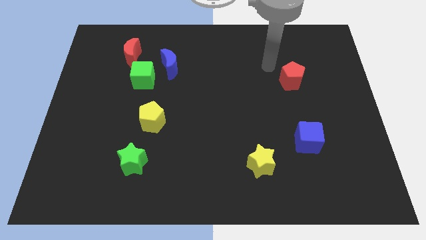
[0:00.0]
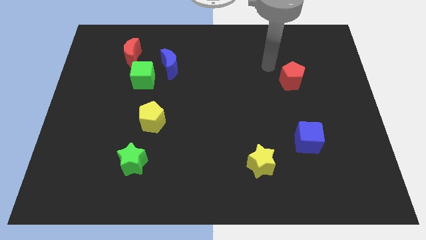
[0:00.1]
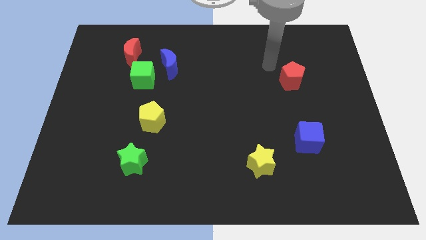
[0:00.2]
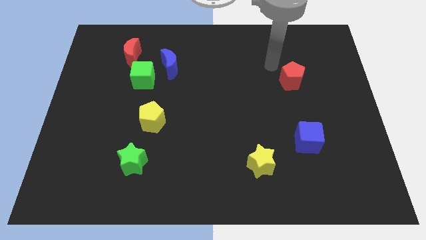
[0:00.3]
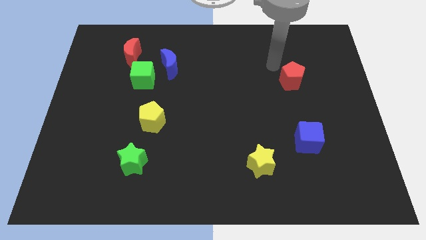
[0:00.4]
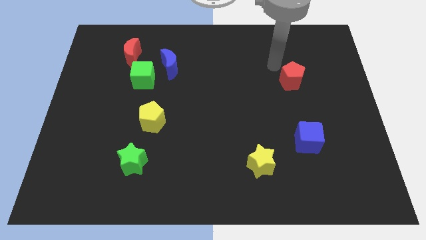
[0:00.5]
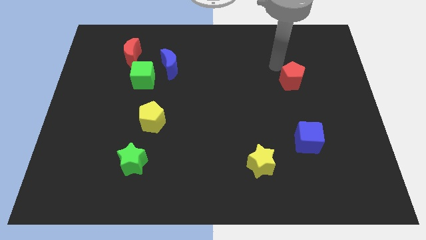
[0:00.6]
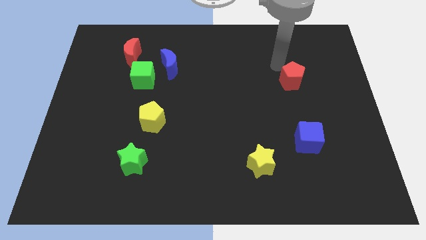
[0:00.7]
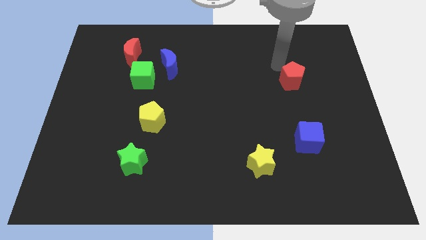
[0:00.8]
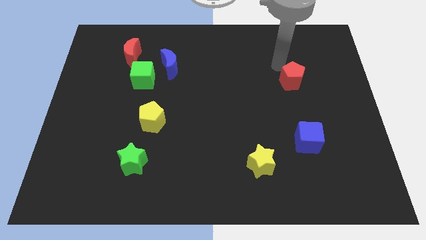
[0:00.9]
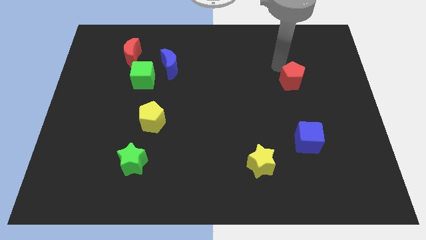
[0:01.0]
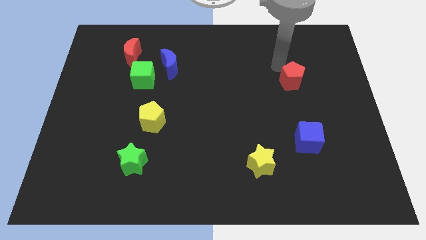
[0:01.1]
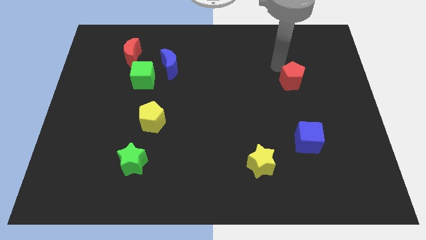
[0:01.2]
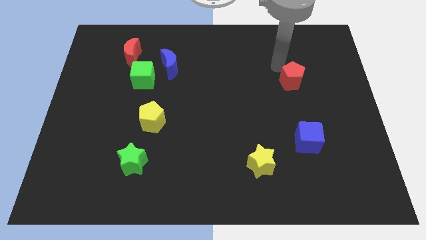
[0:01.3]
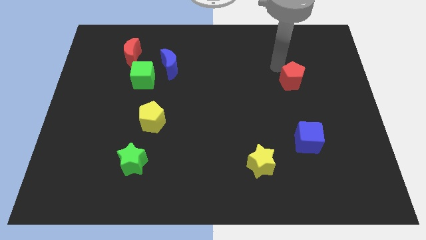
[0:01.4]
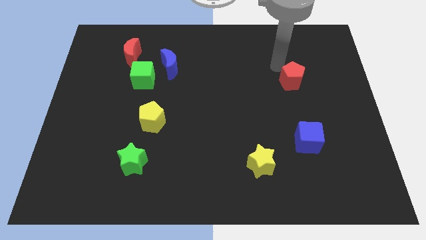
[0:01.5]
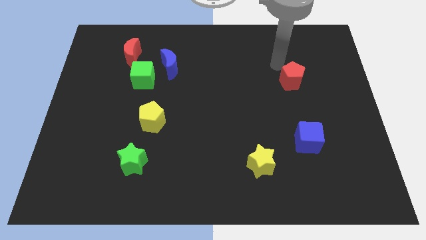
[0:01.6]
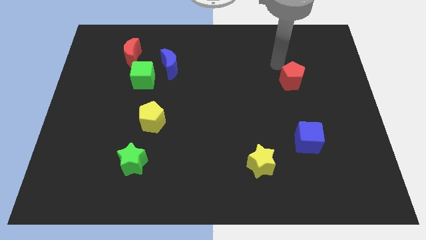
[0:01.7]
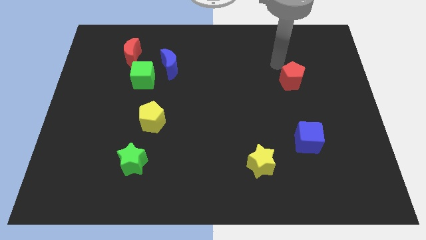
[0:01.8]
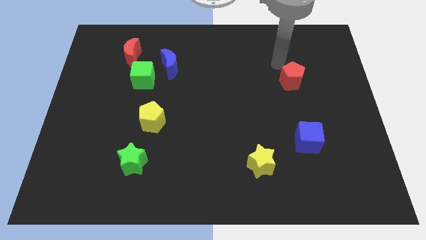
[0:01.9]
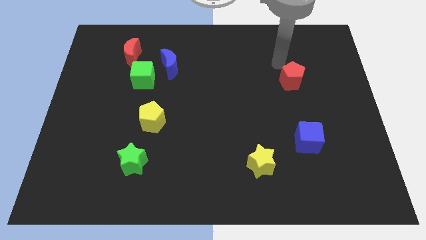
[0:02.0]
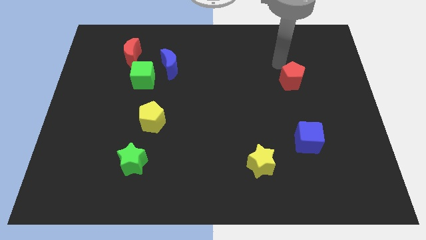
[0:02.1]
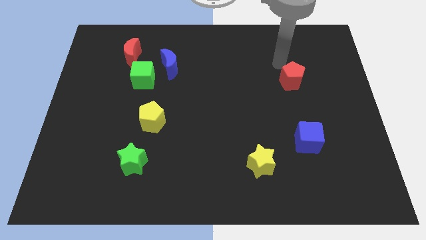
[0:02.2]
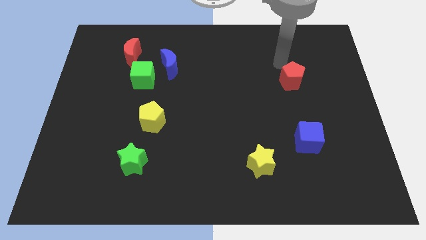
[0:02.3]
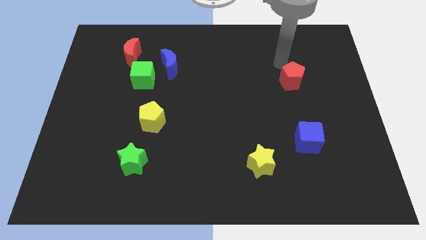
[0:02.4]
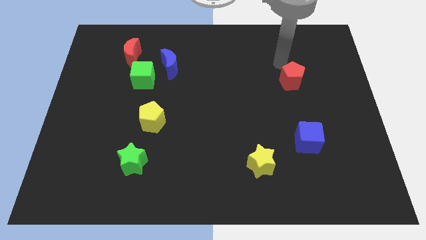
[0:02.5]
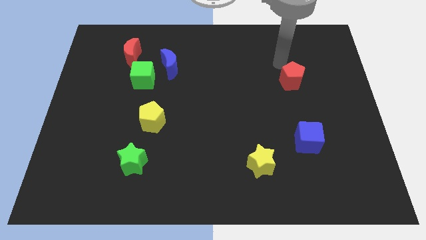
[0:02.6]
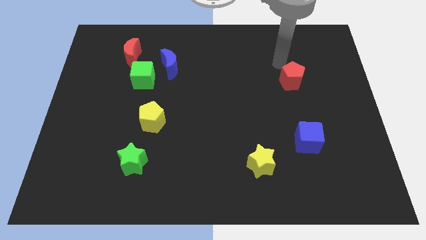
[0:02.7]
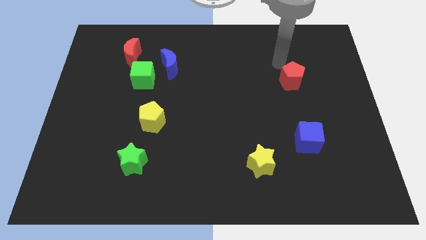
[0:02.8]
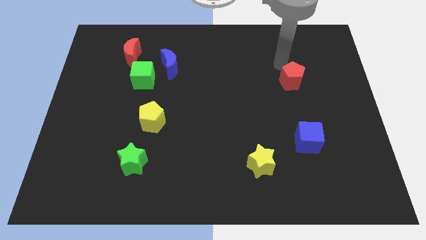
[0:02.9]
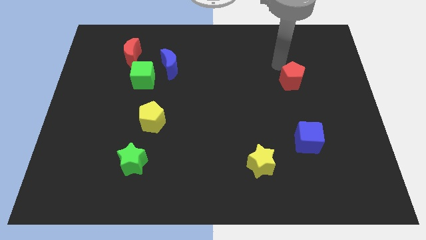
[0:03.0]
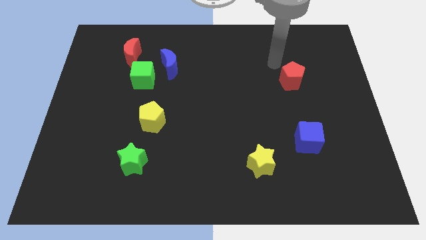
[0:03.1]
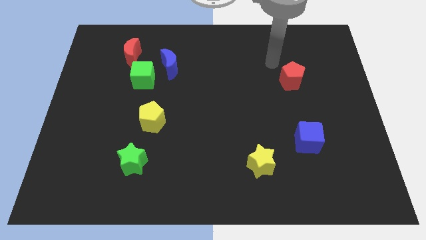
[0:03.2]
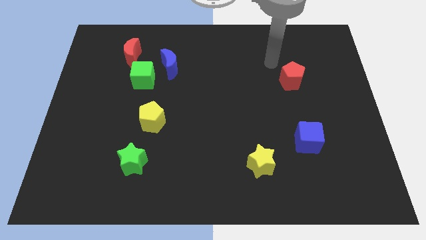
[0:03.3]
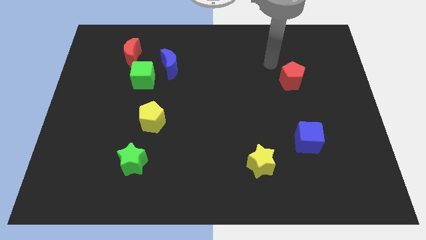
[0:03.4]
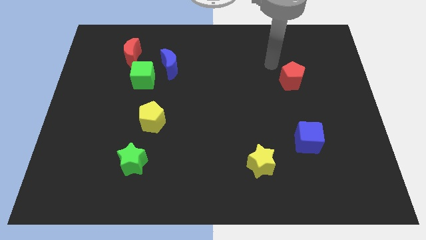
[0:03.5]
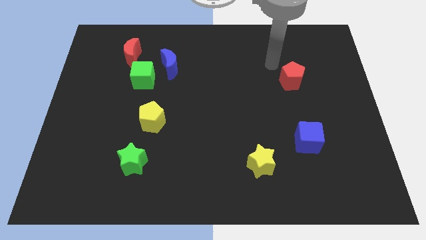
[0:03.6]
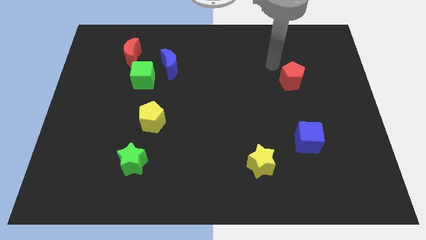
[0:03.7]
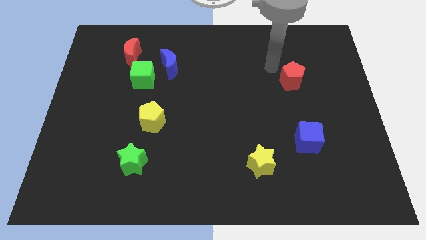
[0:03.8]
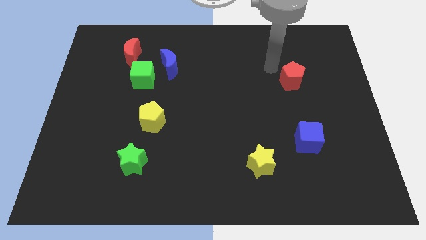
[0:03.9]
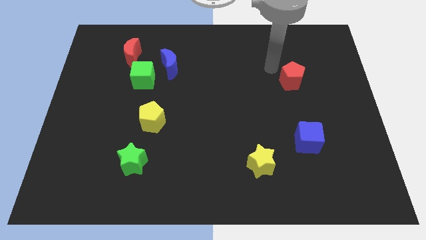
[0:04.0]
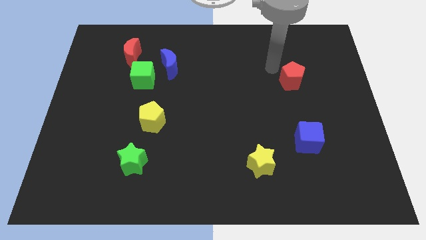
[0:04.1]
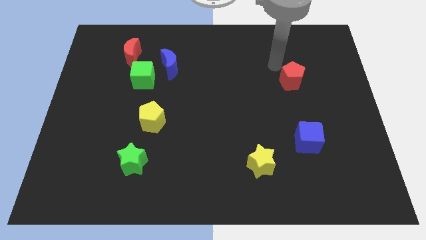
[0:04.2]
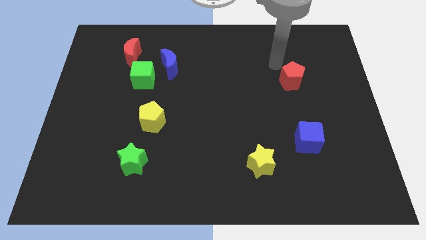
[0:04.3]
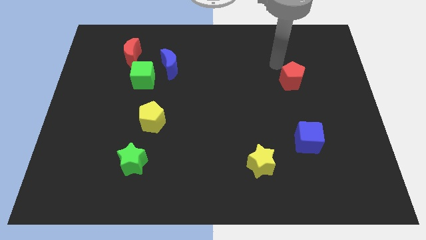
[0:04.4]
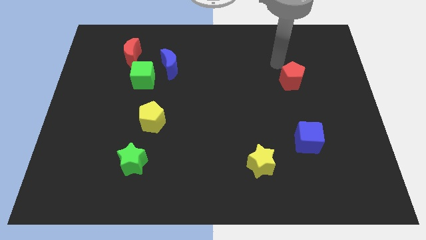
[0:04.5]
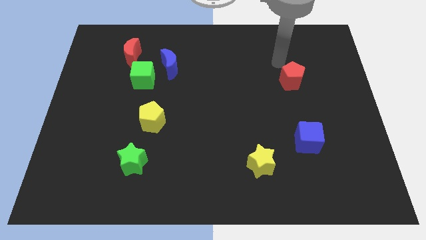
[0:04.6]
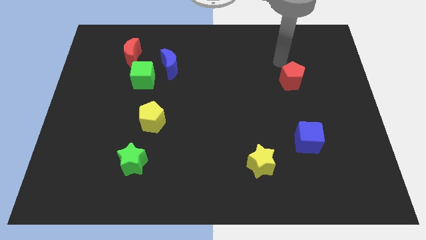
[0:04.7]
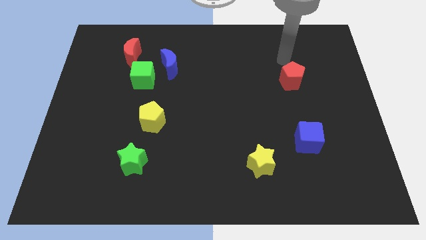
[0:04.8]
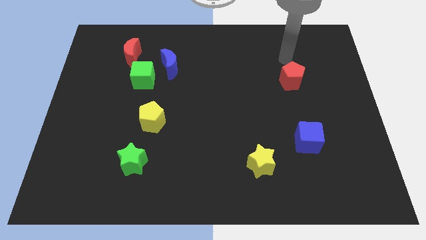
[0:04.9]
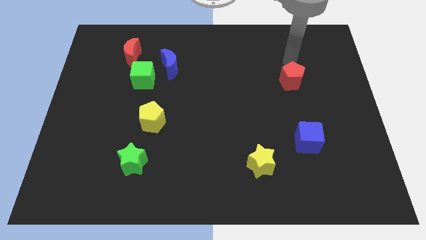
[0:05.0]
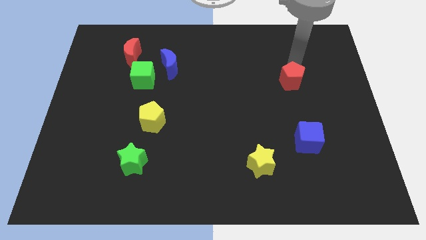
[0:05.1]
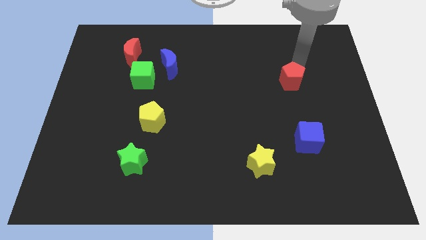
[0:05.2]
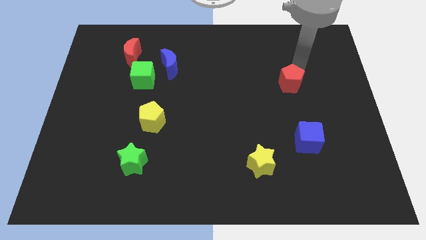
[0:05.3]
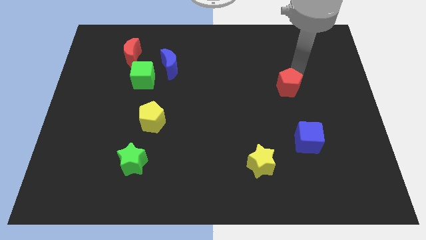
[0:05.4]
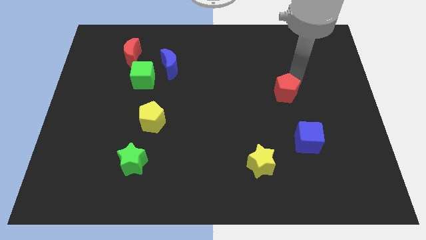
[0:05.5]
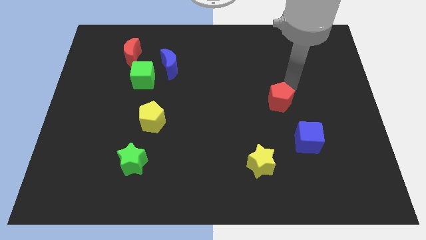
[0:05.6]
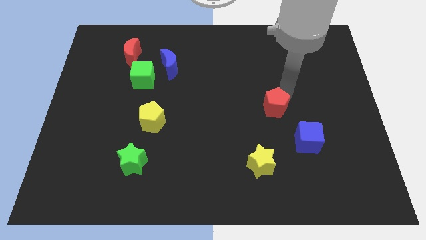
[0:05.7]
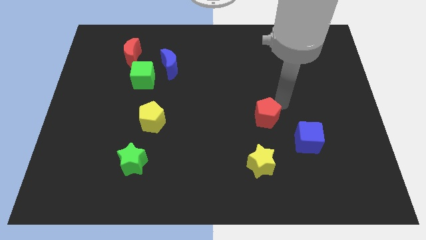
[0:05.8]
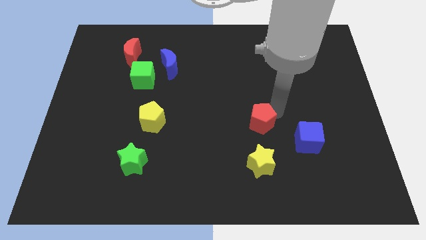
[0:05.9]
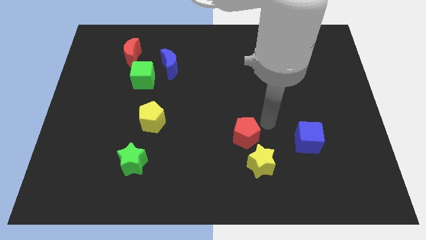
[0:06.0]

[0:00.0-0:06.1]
place the red pentagon above the yellow star

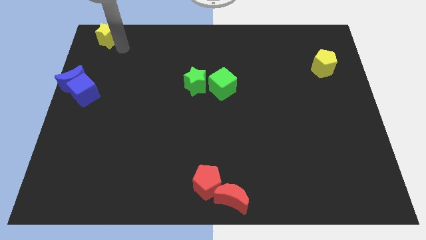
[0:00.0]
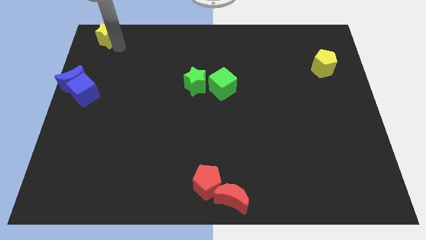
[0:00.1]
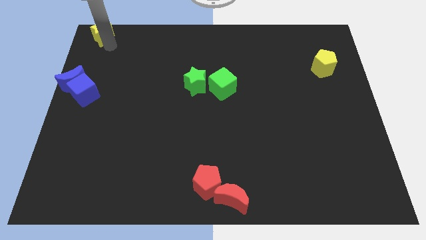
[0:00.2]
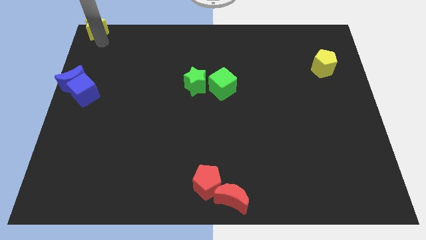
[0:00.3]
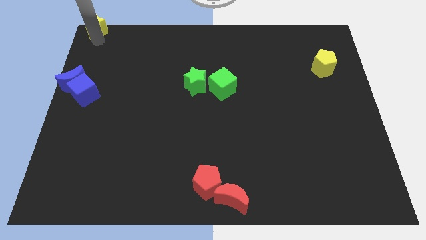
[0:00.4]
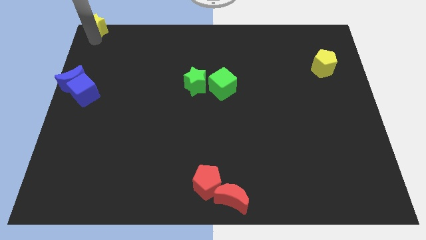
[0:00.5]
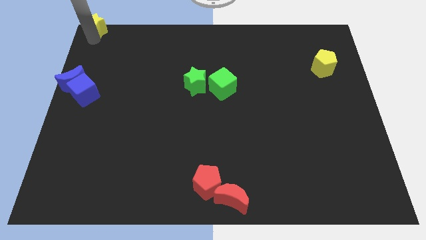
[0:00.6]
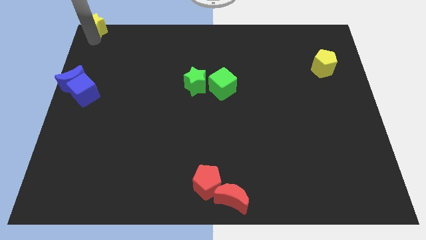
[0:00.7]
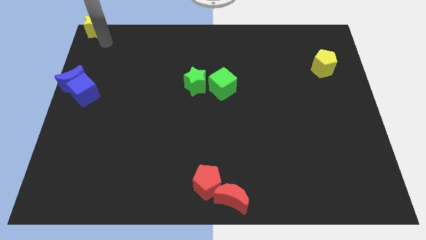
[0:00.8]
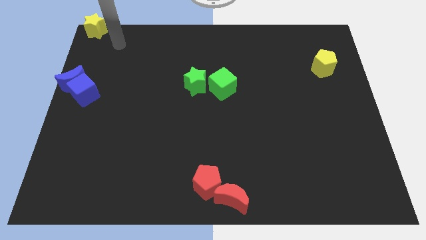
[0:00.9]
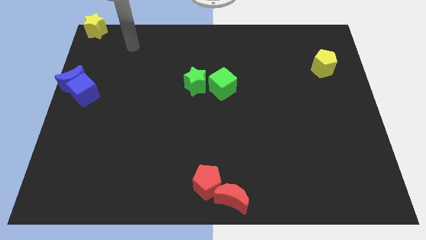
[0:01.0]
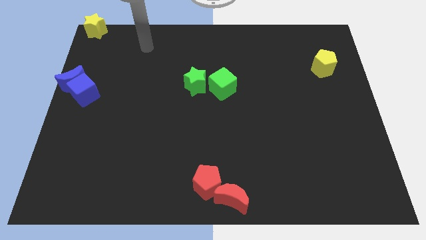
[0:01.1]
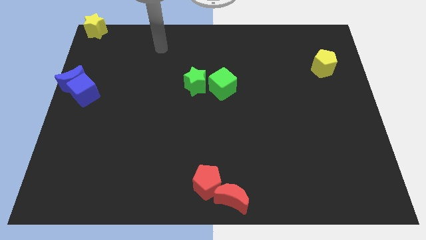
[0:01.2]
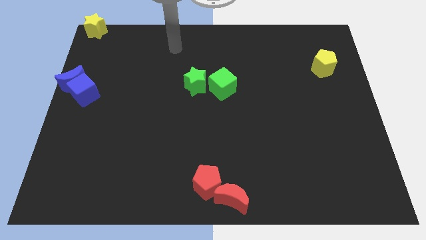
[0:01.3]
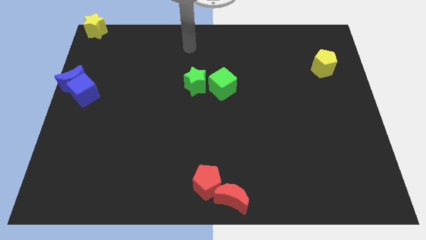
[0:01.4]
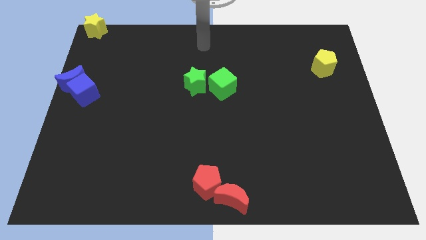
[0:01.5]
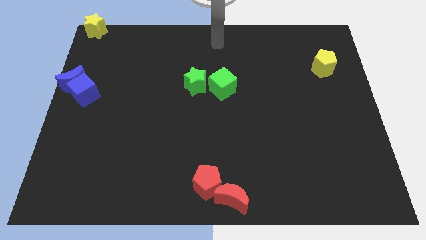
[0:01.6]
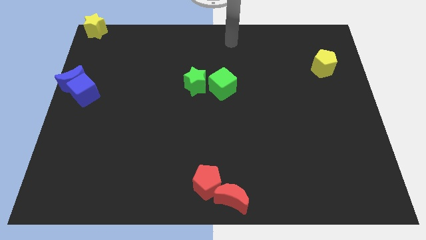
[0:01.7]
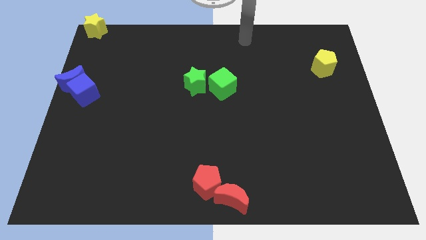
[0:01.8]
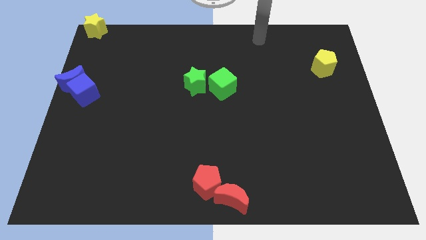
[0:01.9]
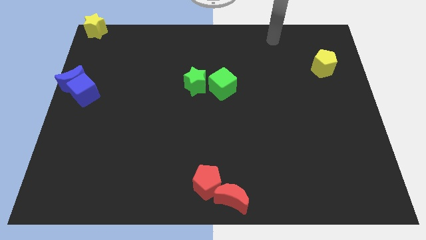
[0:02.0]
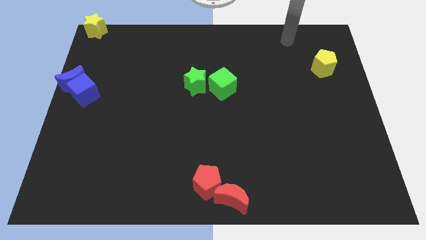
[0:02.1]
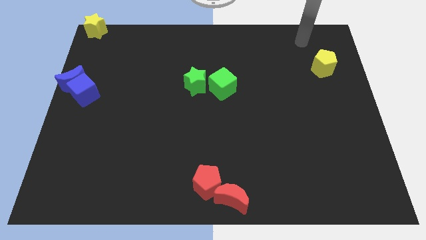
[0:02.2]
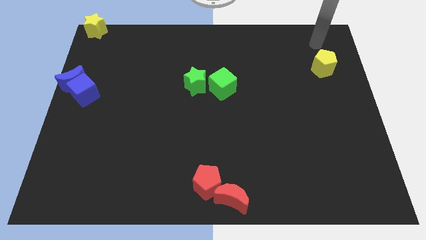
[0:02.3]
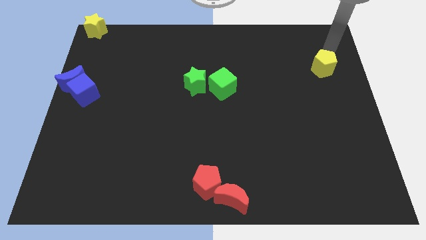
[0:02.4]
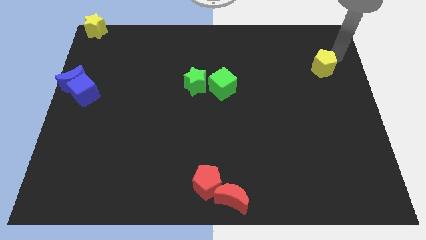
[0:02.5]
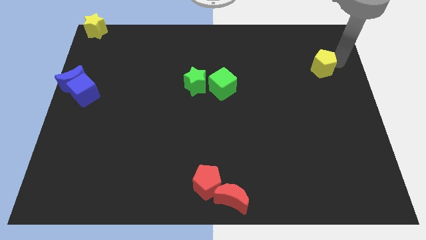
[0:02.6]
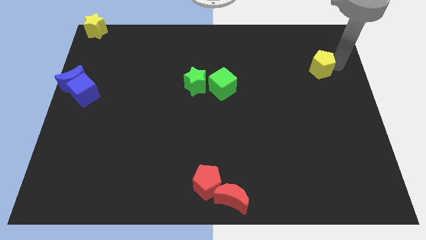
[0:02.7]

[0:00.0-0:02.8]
move the arm away from the yellow star
